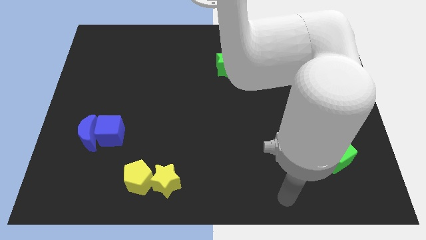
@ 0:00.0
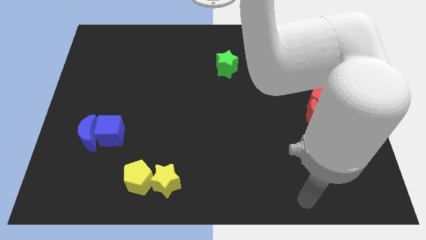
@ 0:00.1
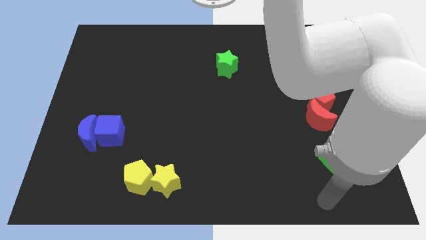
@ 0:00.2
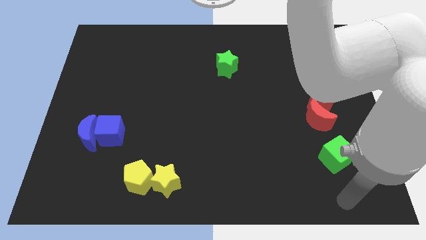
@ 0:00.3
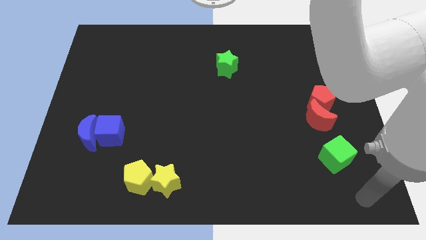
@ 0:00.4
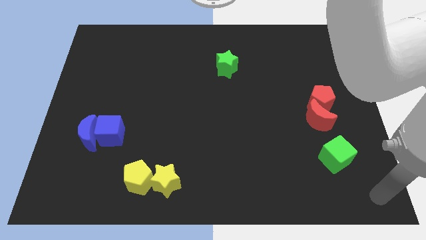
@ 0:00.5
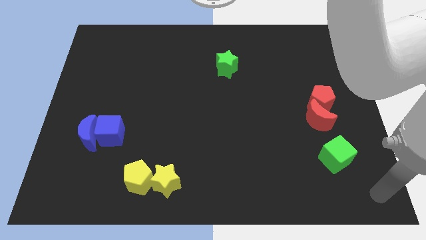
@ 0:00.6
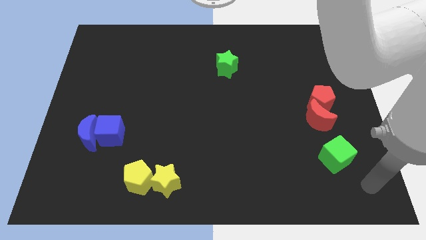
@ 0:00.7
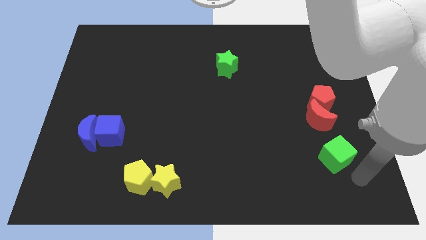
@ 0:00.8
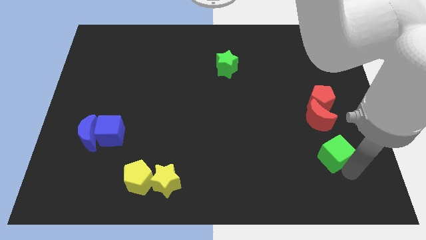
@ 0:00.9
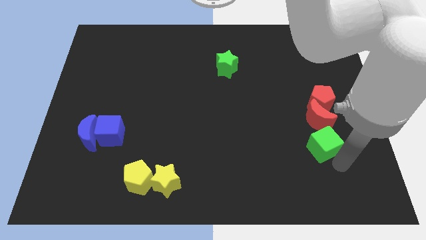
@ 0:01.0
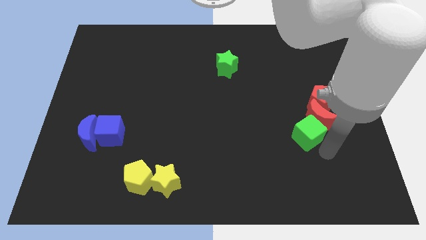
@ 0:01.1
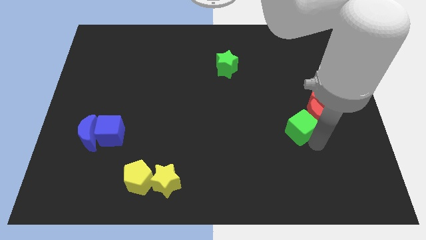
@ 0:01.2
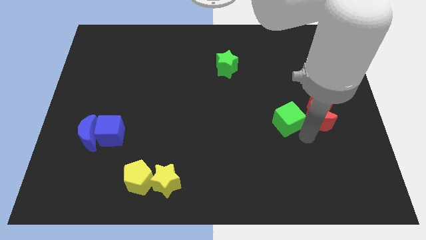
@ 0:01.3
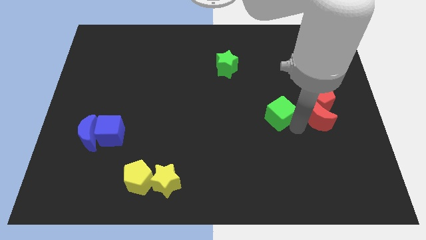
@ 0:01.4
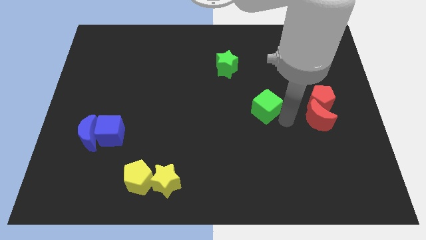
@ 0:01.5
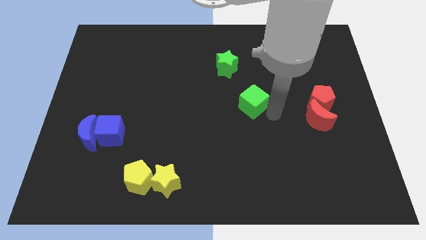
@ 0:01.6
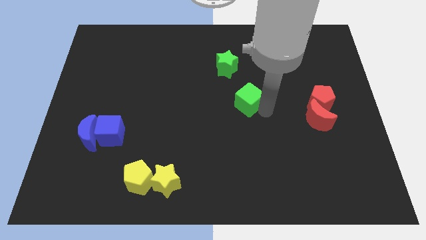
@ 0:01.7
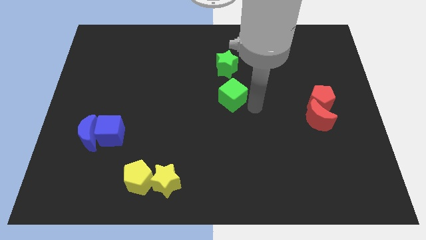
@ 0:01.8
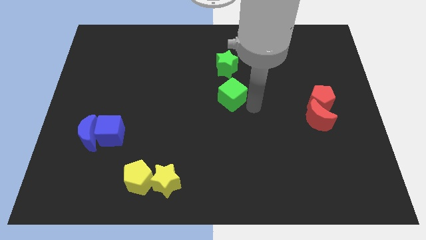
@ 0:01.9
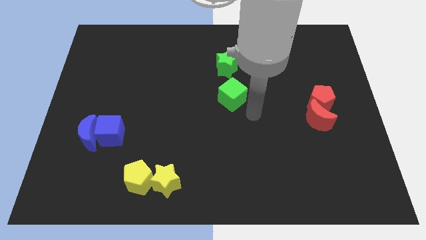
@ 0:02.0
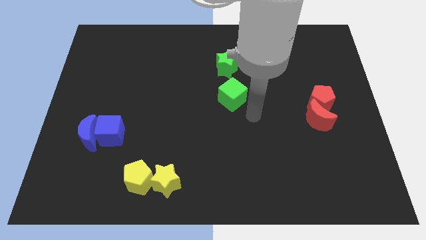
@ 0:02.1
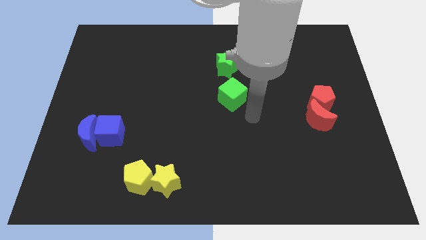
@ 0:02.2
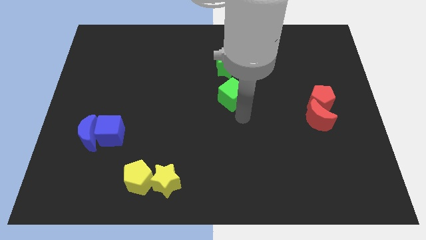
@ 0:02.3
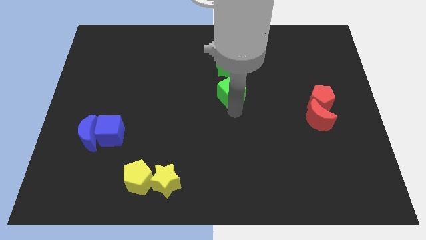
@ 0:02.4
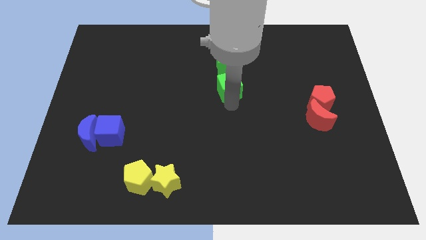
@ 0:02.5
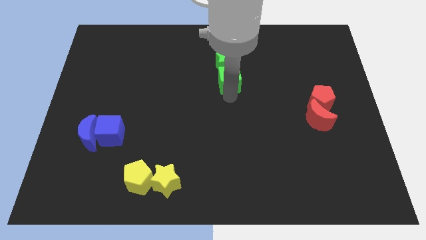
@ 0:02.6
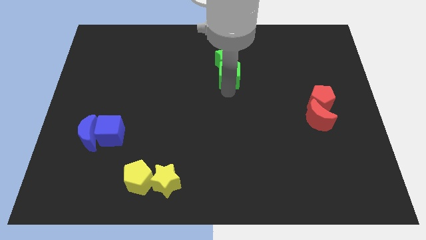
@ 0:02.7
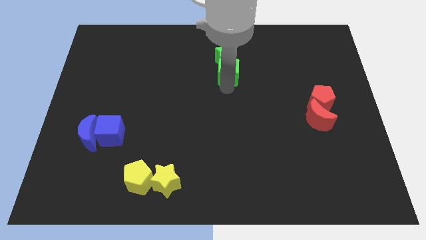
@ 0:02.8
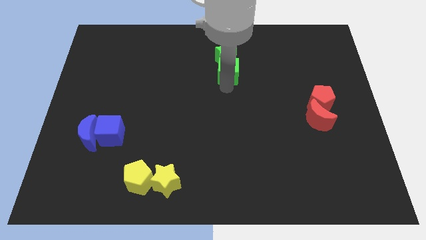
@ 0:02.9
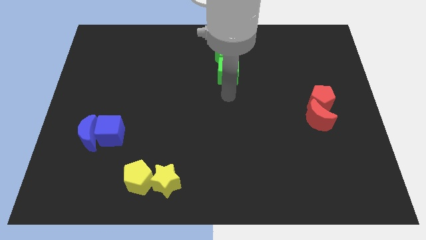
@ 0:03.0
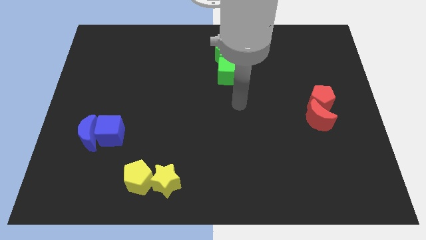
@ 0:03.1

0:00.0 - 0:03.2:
push the green cube into the green star

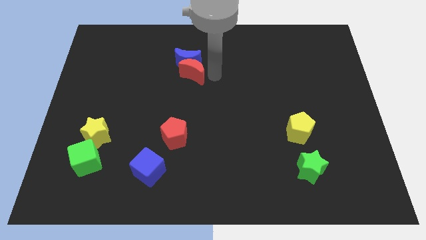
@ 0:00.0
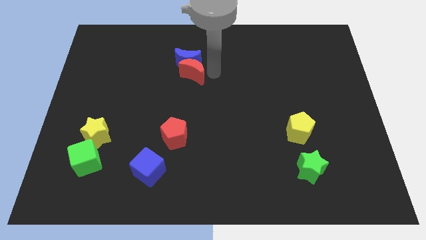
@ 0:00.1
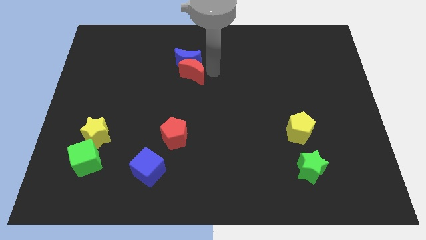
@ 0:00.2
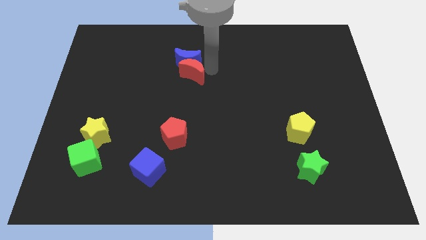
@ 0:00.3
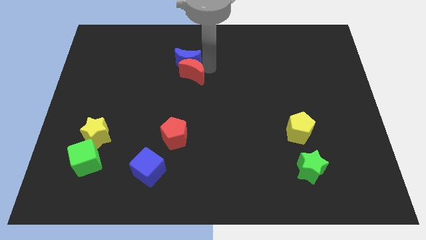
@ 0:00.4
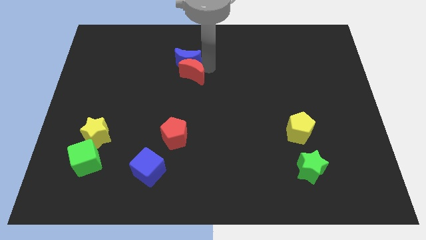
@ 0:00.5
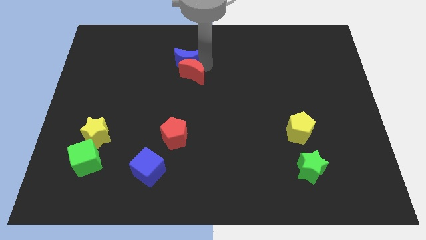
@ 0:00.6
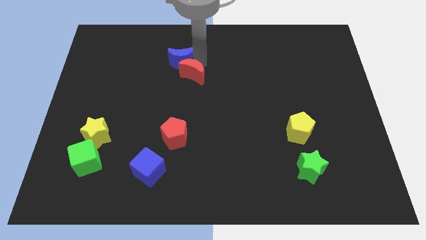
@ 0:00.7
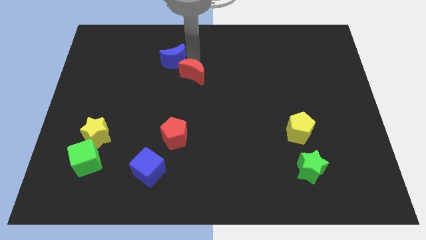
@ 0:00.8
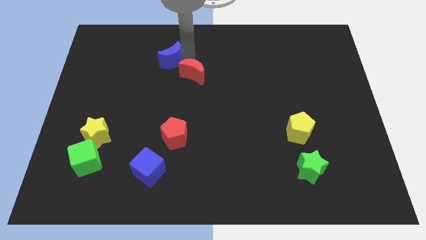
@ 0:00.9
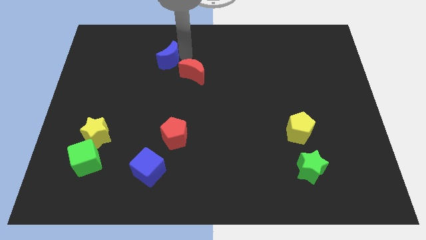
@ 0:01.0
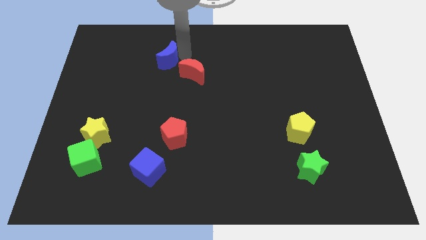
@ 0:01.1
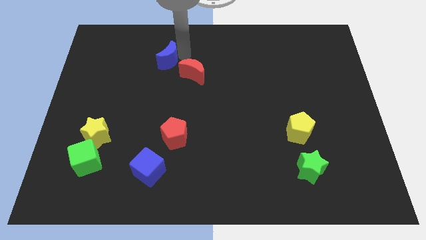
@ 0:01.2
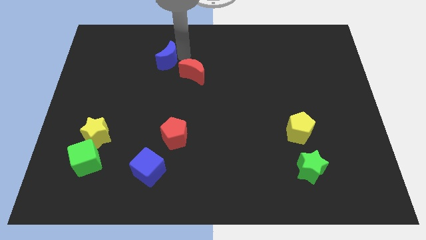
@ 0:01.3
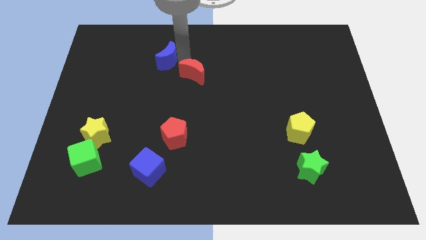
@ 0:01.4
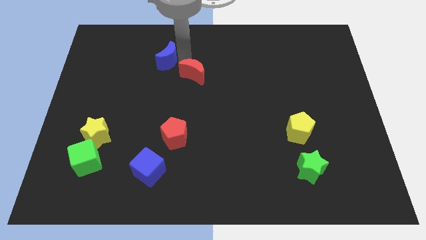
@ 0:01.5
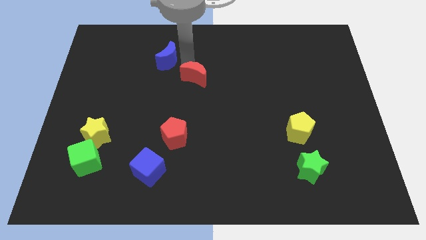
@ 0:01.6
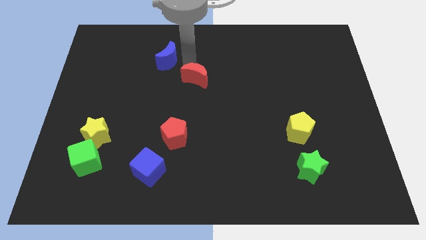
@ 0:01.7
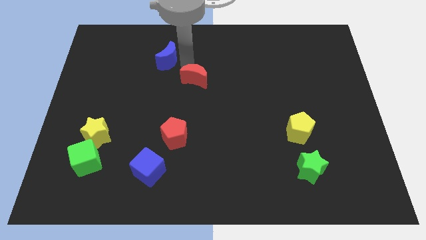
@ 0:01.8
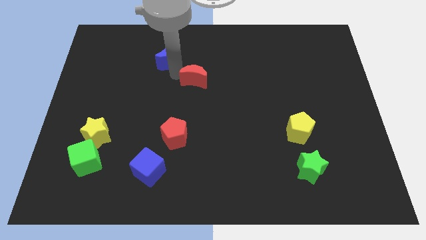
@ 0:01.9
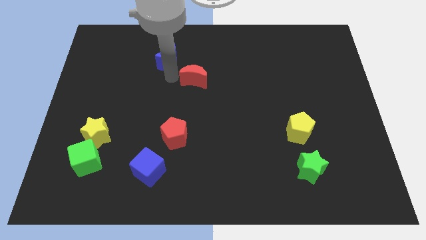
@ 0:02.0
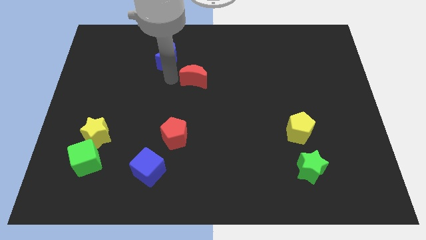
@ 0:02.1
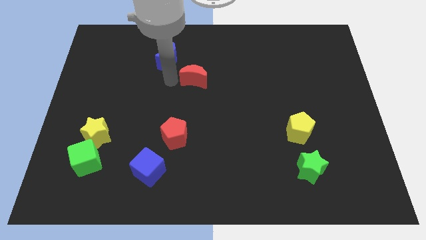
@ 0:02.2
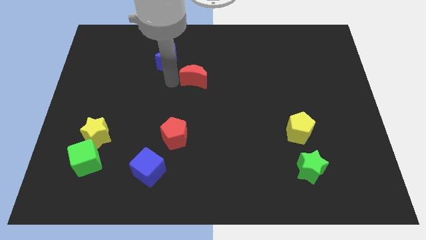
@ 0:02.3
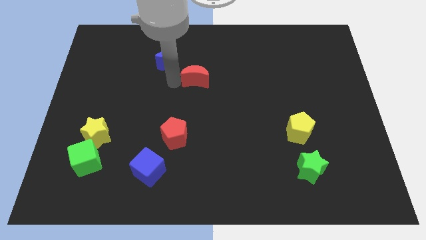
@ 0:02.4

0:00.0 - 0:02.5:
separate blue moon from red crescent

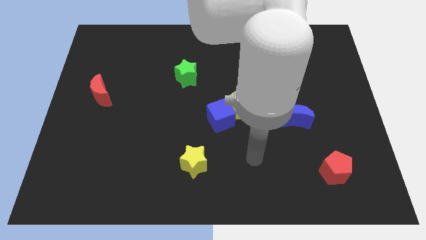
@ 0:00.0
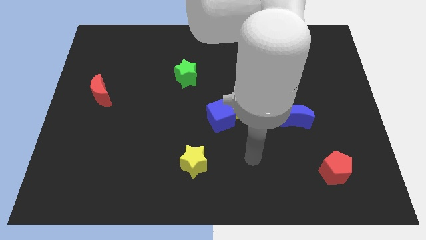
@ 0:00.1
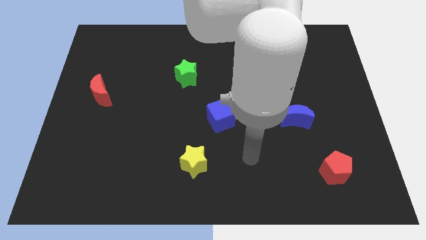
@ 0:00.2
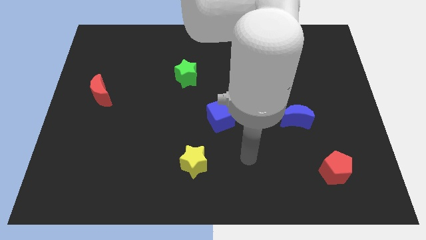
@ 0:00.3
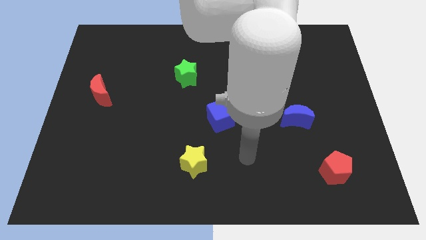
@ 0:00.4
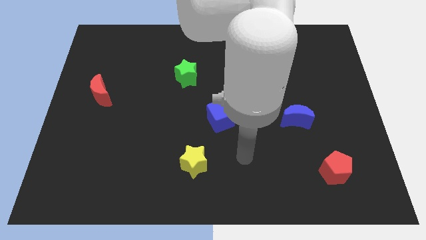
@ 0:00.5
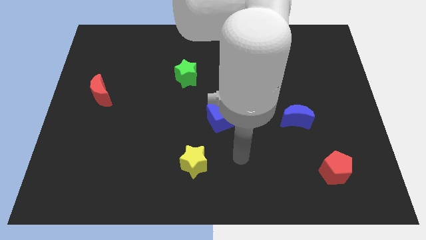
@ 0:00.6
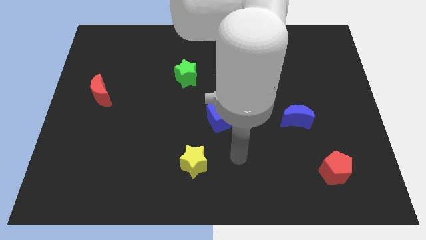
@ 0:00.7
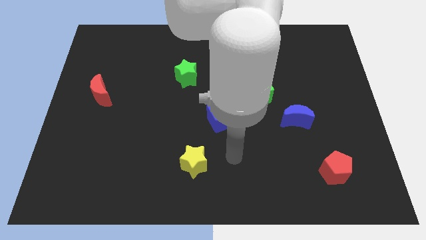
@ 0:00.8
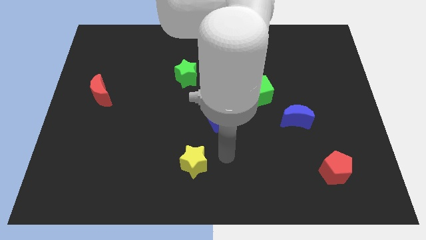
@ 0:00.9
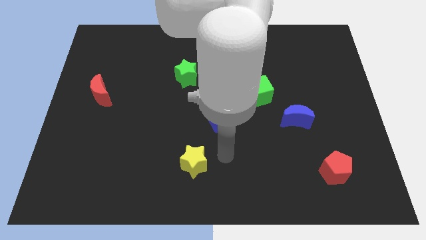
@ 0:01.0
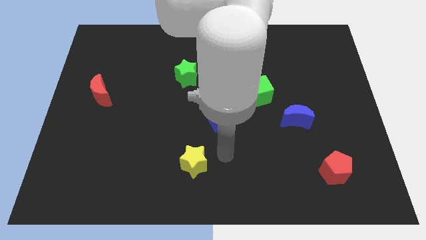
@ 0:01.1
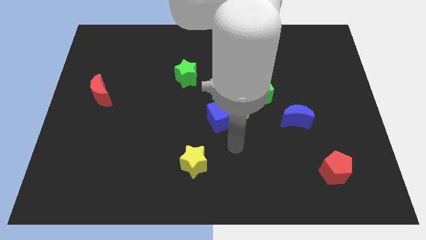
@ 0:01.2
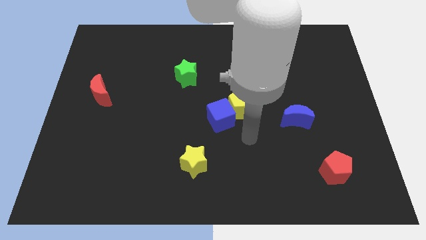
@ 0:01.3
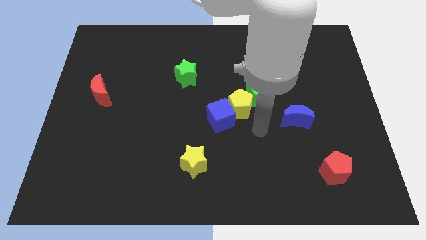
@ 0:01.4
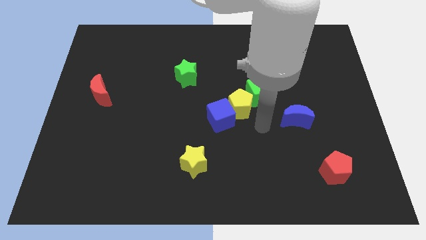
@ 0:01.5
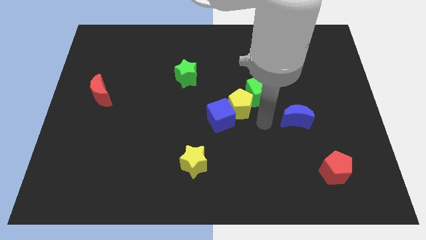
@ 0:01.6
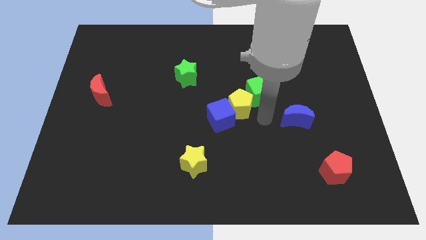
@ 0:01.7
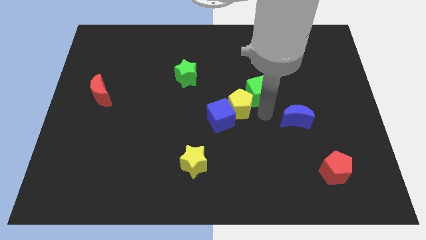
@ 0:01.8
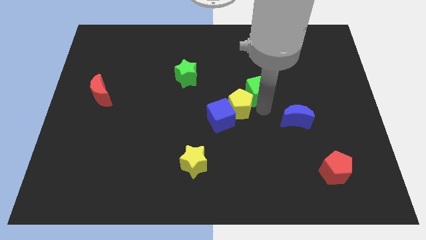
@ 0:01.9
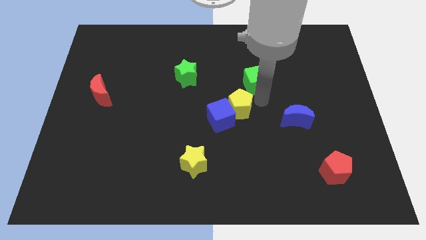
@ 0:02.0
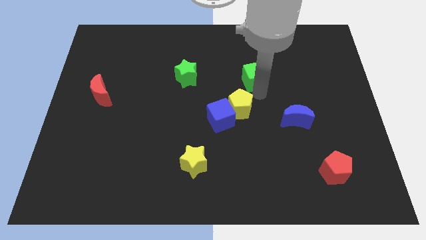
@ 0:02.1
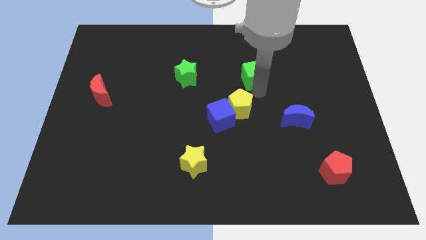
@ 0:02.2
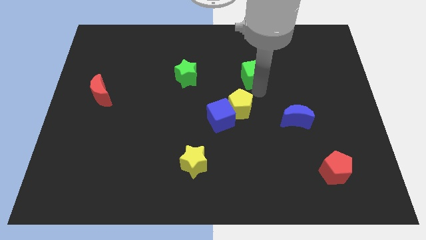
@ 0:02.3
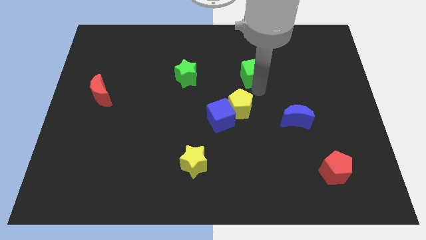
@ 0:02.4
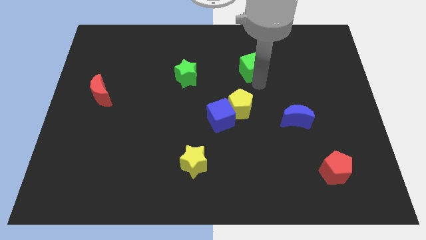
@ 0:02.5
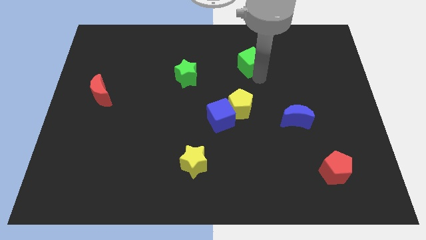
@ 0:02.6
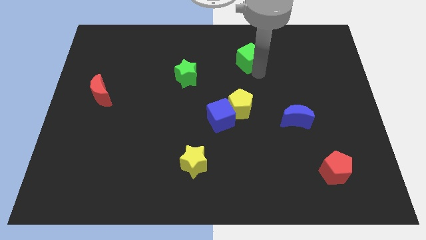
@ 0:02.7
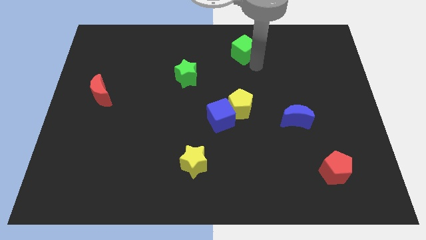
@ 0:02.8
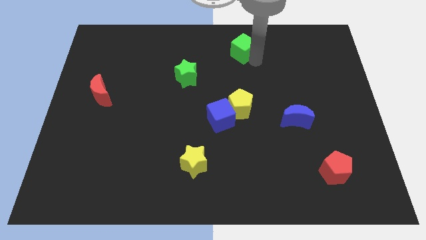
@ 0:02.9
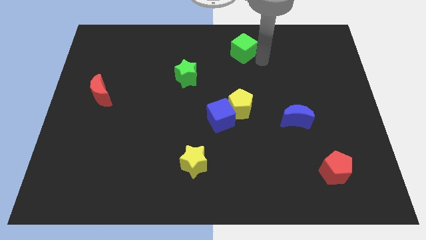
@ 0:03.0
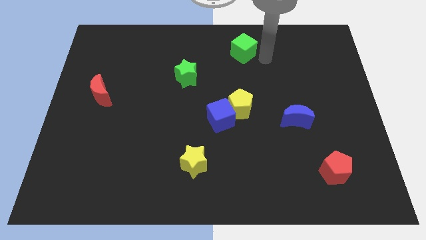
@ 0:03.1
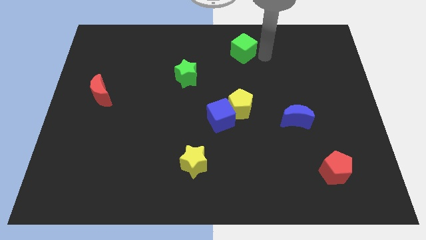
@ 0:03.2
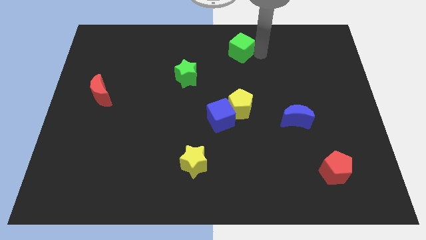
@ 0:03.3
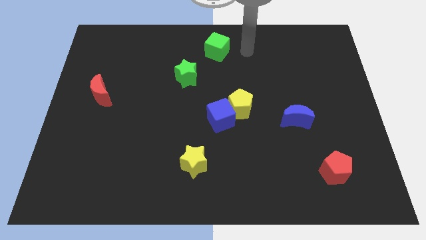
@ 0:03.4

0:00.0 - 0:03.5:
move the green cube diagonally right to the green star
